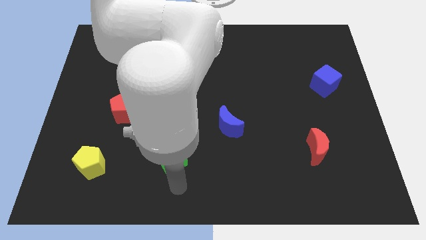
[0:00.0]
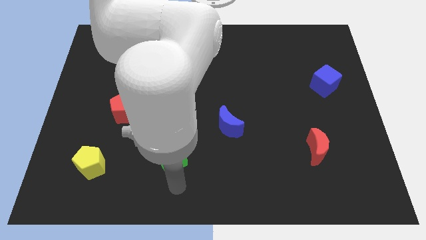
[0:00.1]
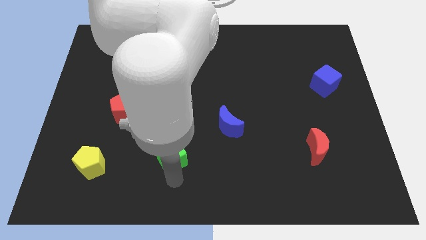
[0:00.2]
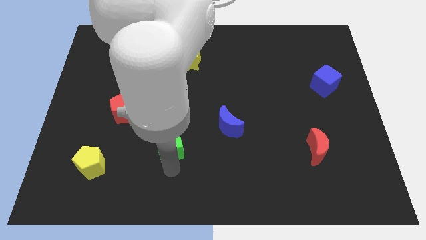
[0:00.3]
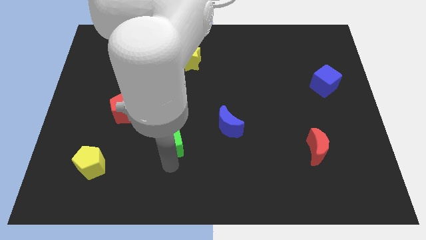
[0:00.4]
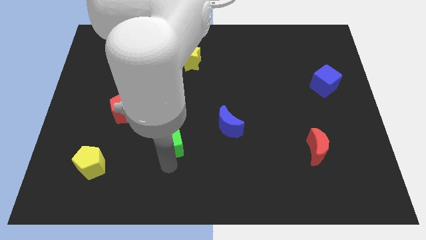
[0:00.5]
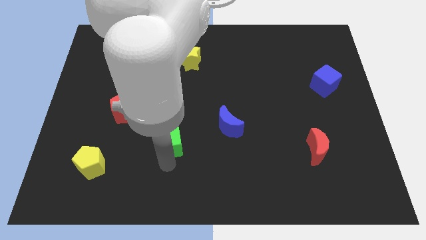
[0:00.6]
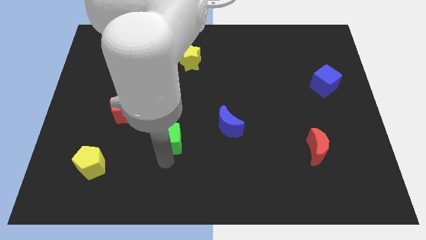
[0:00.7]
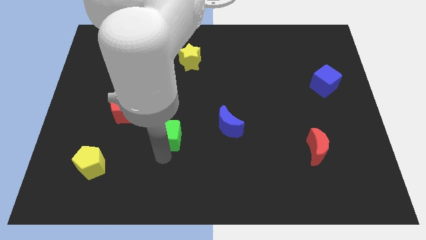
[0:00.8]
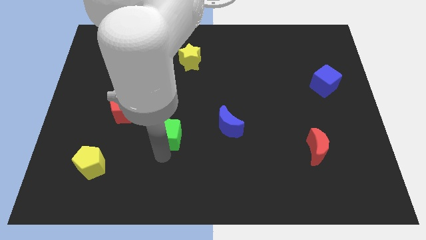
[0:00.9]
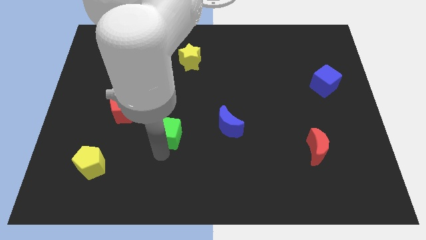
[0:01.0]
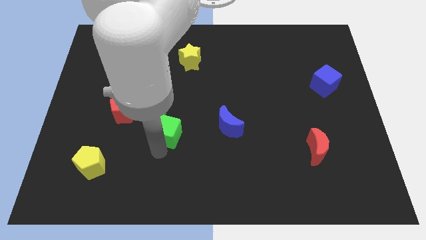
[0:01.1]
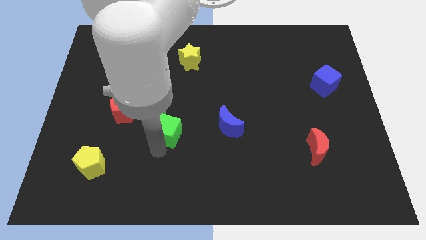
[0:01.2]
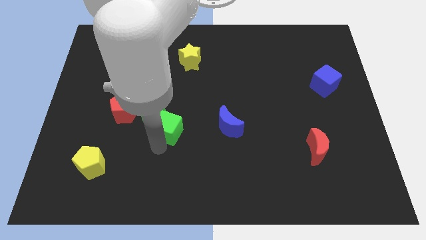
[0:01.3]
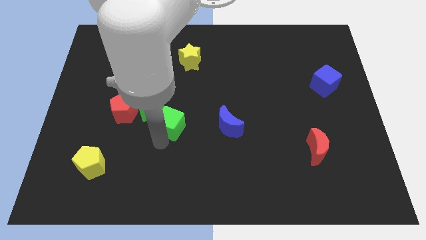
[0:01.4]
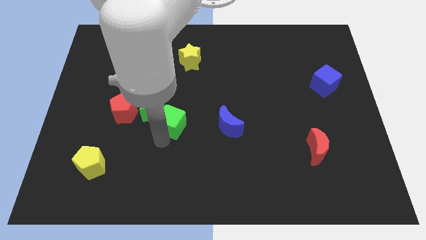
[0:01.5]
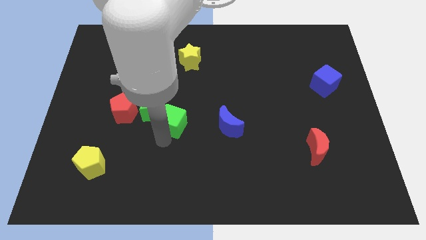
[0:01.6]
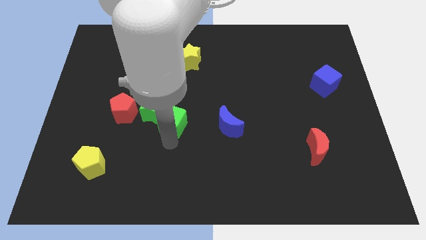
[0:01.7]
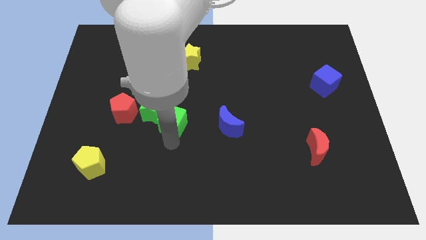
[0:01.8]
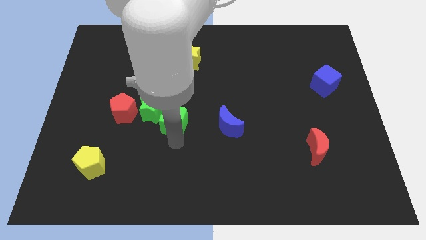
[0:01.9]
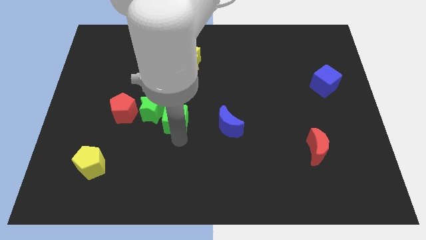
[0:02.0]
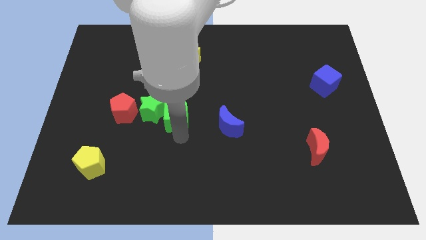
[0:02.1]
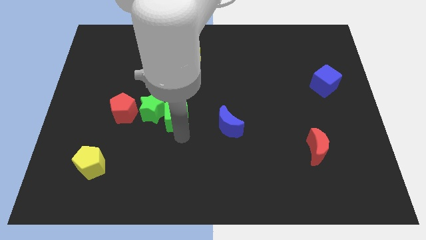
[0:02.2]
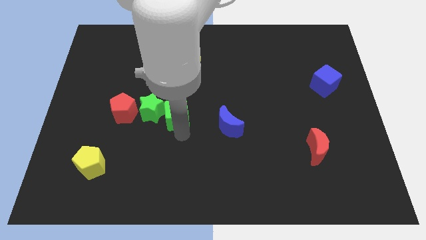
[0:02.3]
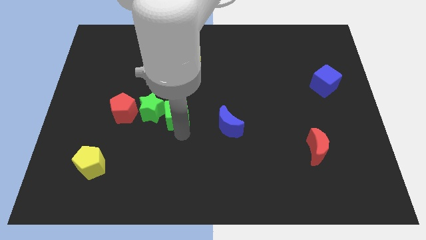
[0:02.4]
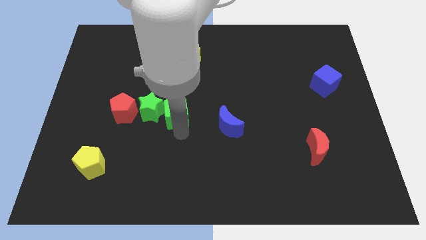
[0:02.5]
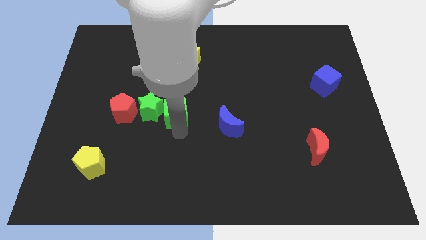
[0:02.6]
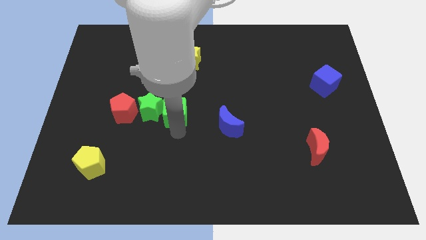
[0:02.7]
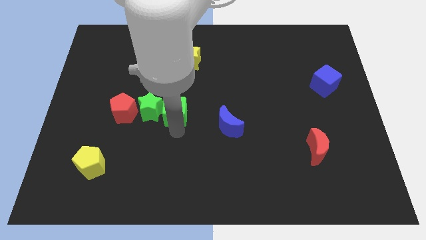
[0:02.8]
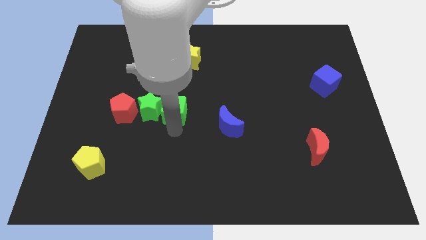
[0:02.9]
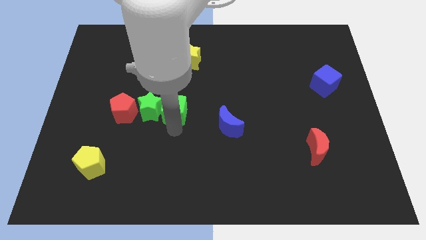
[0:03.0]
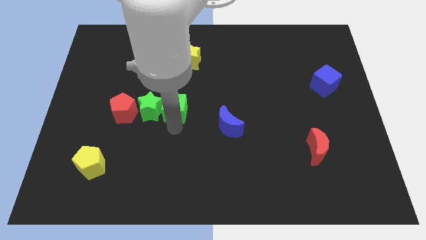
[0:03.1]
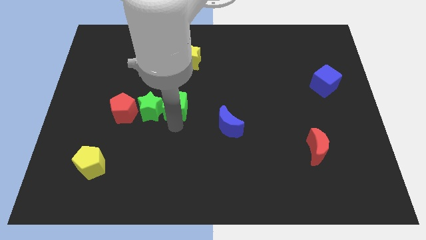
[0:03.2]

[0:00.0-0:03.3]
place green cube to the right of green star

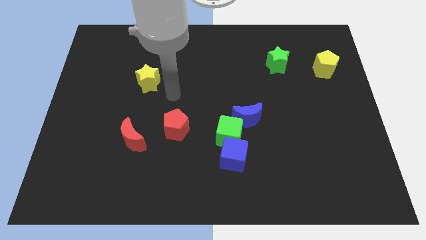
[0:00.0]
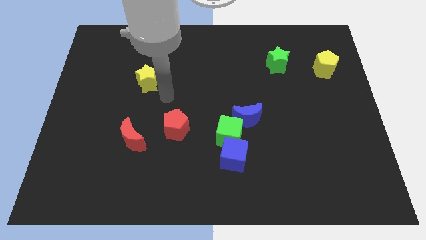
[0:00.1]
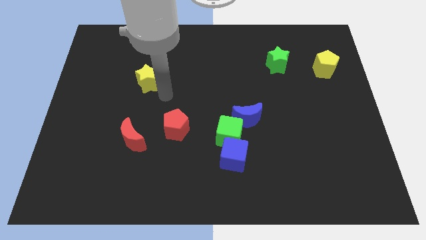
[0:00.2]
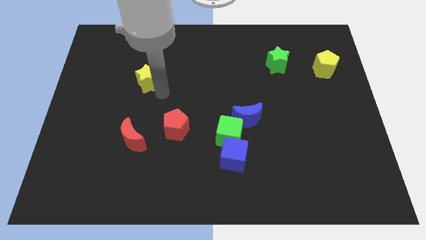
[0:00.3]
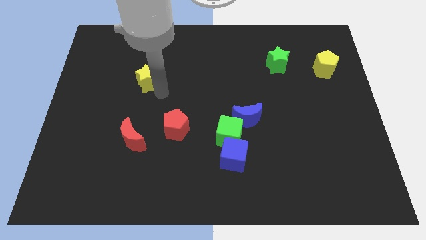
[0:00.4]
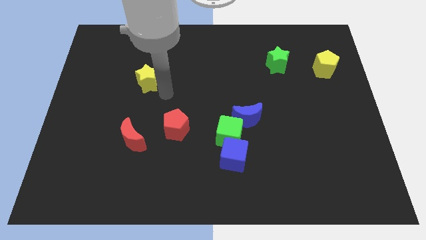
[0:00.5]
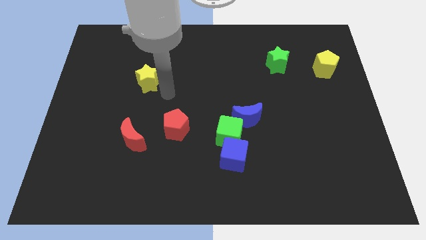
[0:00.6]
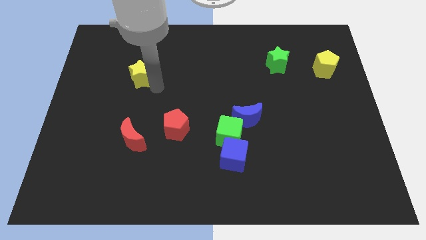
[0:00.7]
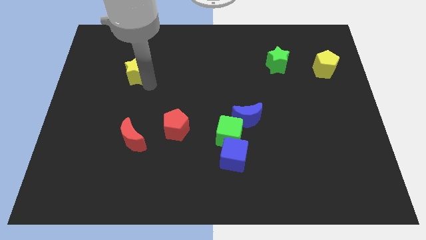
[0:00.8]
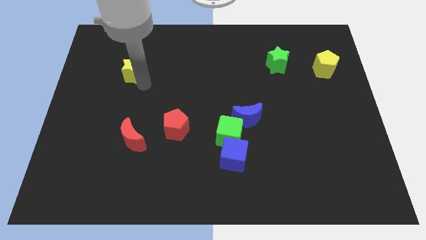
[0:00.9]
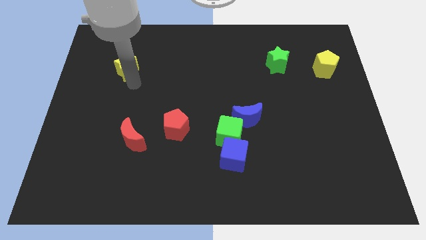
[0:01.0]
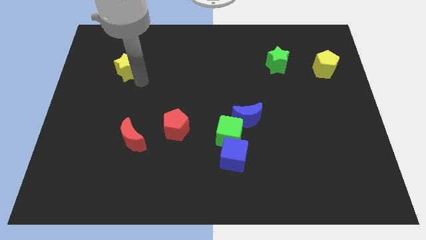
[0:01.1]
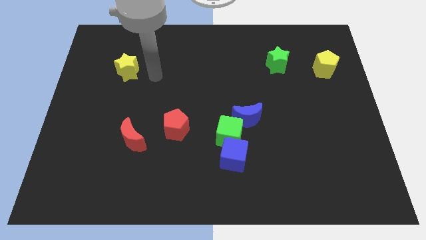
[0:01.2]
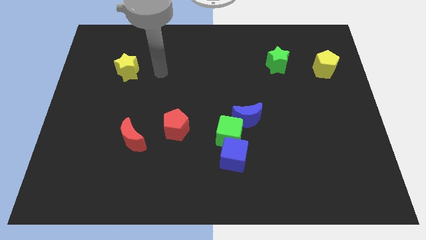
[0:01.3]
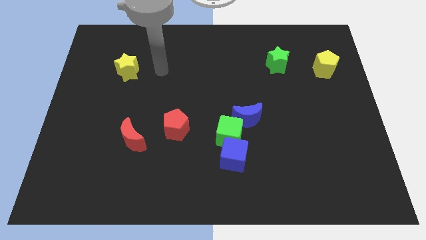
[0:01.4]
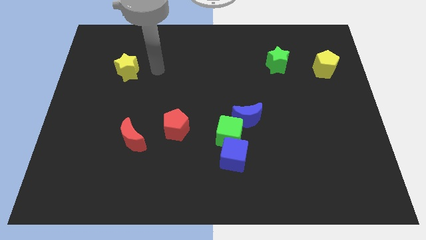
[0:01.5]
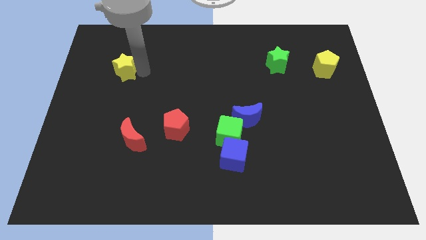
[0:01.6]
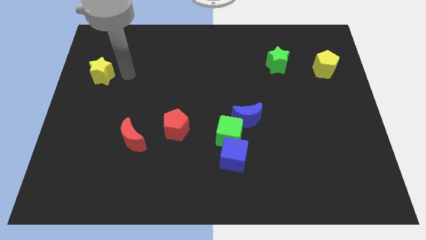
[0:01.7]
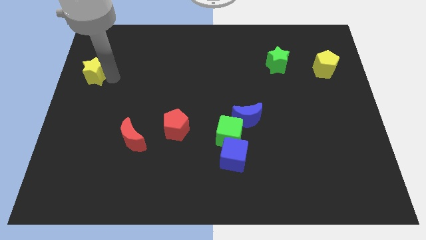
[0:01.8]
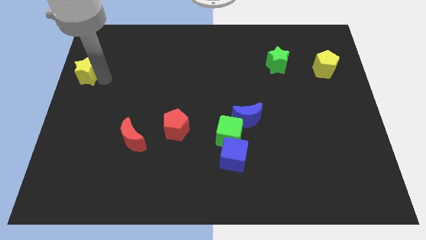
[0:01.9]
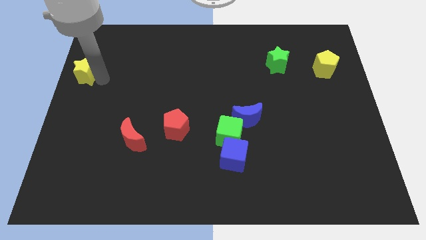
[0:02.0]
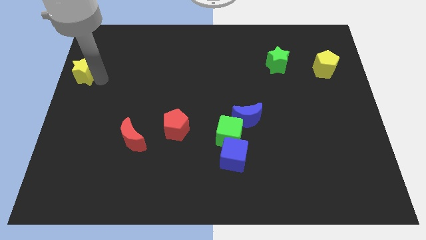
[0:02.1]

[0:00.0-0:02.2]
push the yellow star to the left of the board

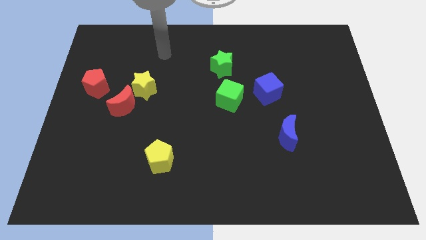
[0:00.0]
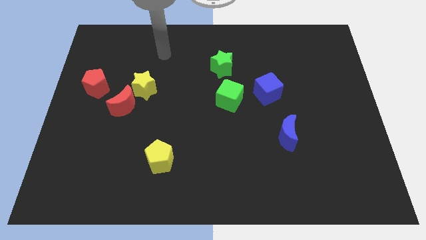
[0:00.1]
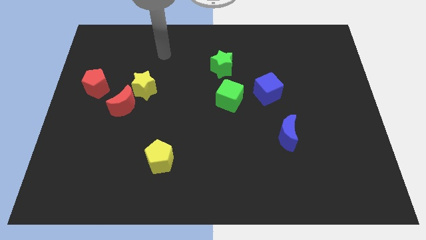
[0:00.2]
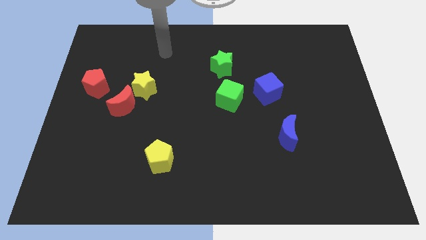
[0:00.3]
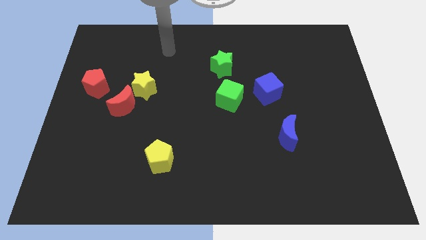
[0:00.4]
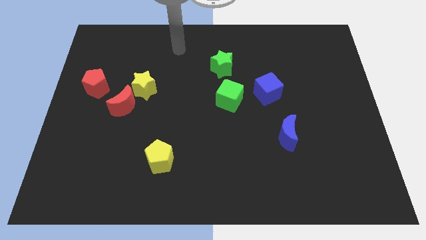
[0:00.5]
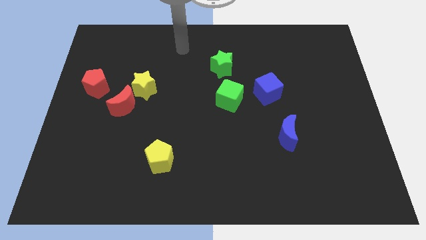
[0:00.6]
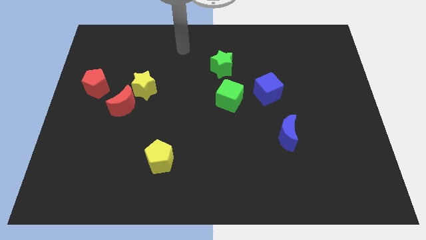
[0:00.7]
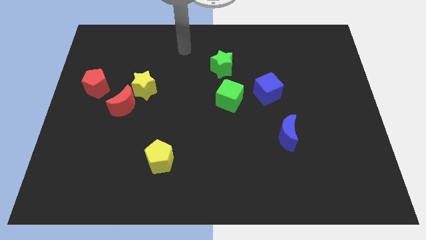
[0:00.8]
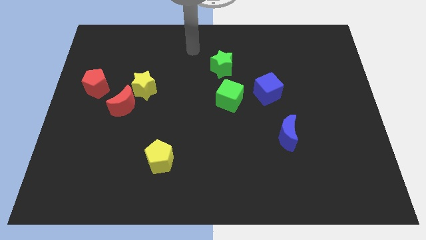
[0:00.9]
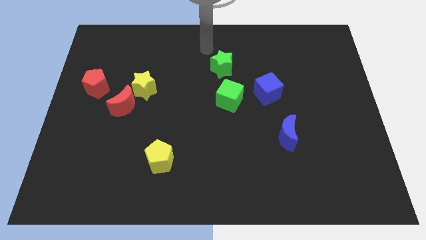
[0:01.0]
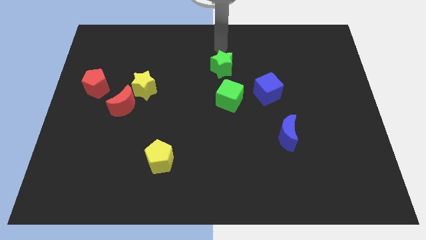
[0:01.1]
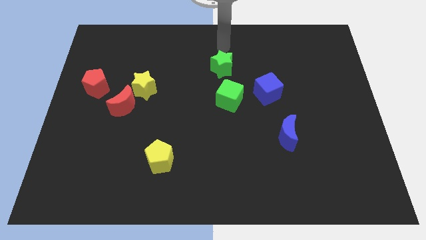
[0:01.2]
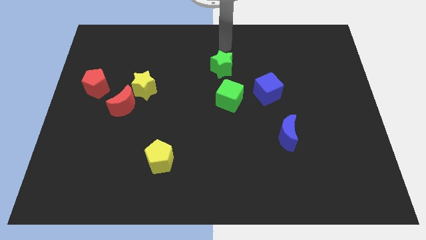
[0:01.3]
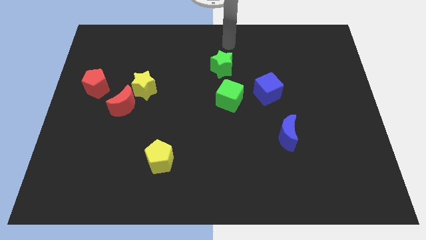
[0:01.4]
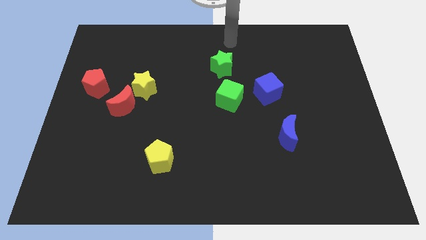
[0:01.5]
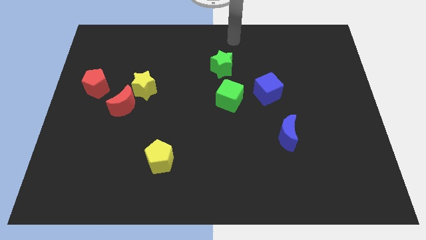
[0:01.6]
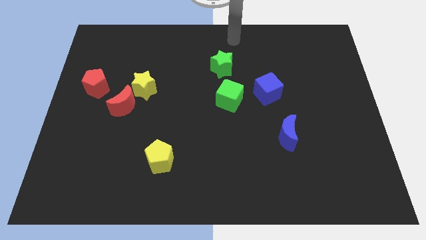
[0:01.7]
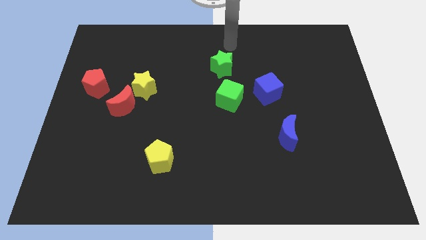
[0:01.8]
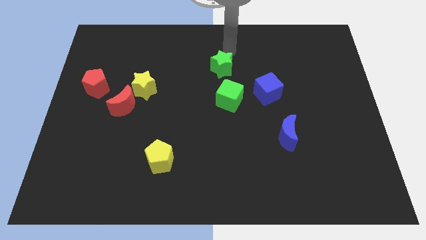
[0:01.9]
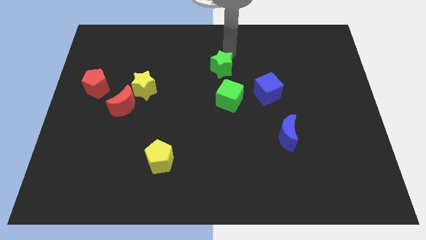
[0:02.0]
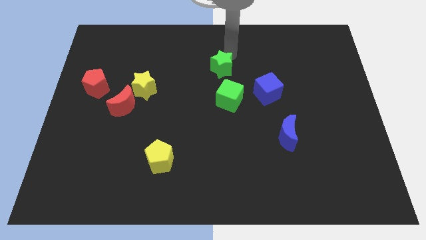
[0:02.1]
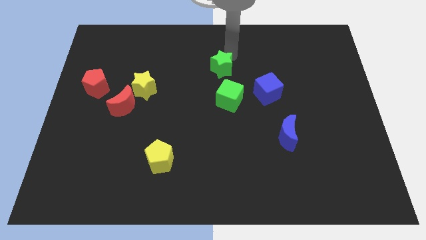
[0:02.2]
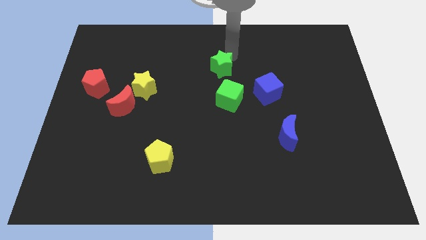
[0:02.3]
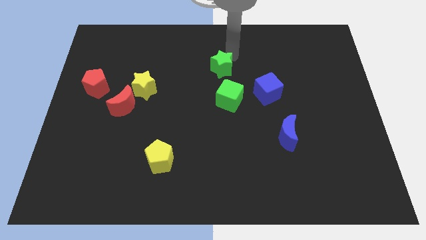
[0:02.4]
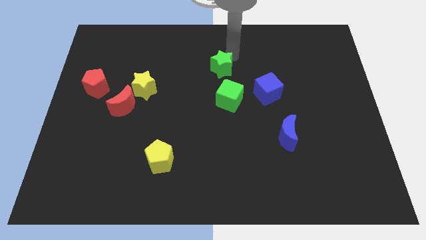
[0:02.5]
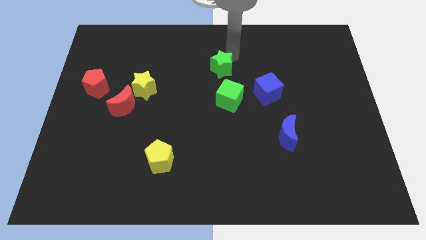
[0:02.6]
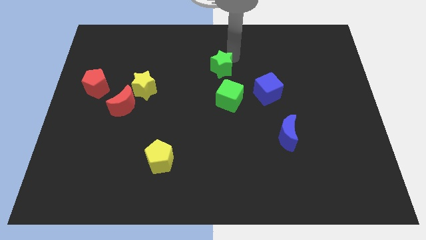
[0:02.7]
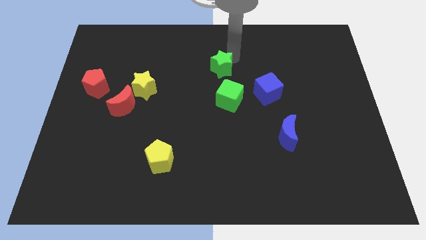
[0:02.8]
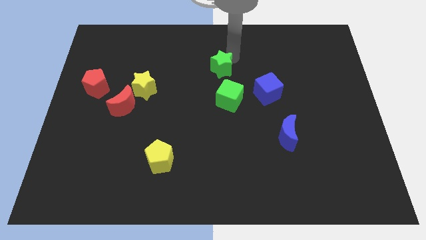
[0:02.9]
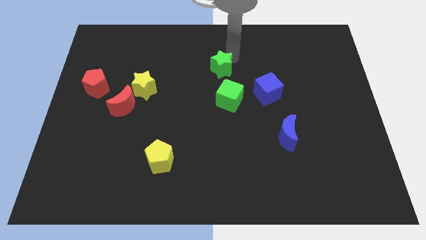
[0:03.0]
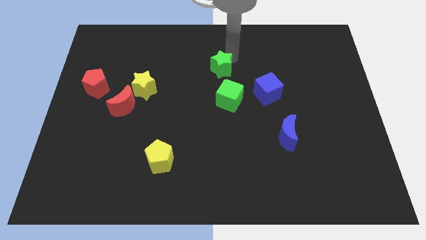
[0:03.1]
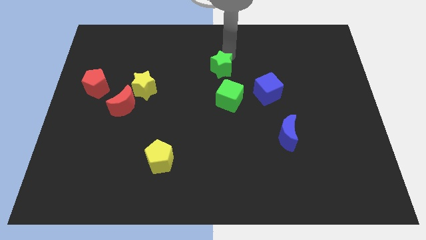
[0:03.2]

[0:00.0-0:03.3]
place your arm to the top of green star

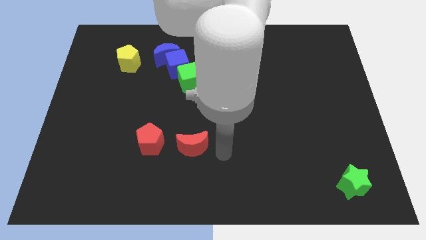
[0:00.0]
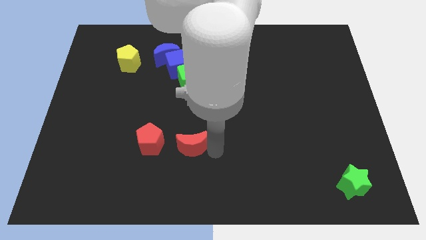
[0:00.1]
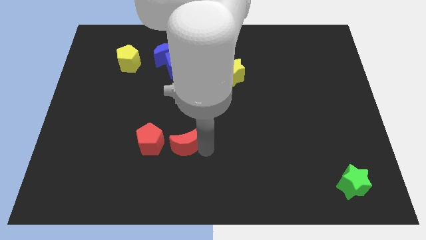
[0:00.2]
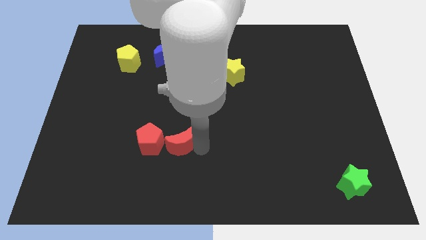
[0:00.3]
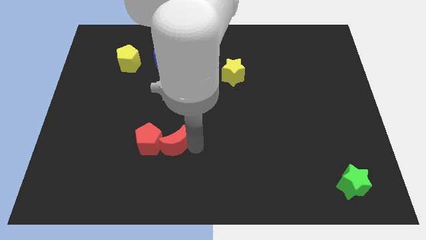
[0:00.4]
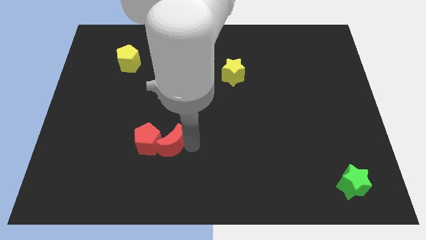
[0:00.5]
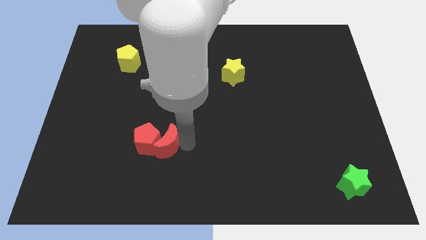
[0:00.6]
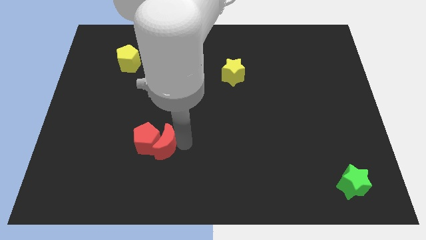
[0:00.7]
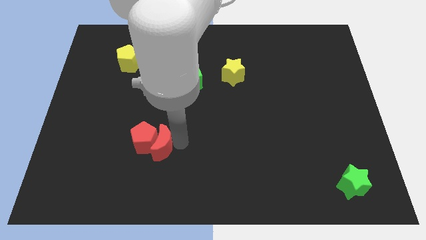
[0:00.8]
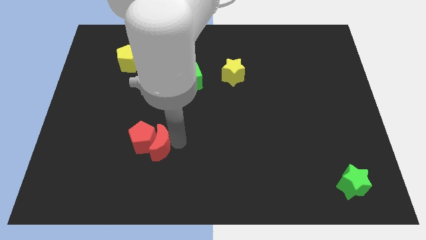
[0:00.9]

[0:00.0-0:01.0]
push the red moon into the red pentagon
